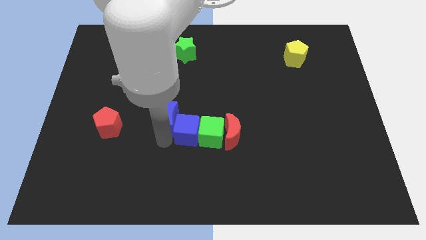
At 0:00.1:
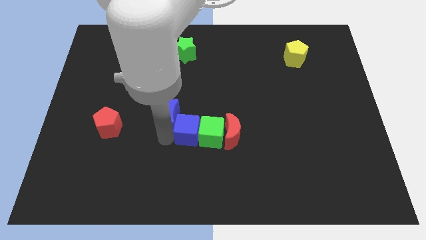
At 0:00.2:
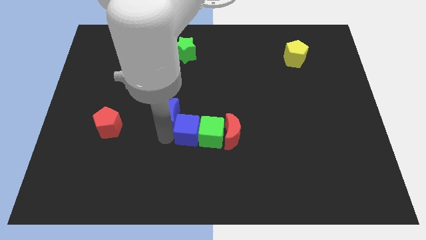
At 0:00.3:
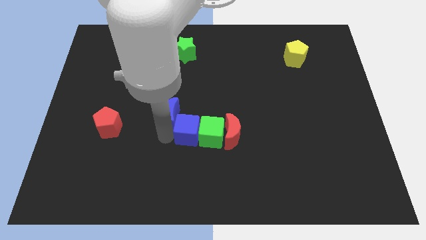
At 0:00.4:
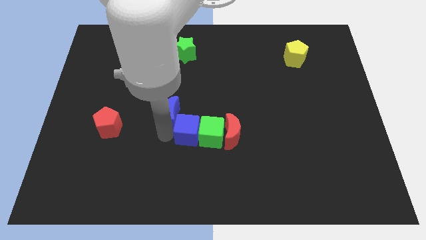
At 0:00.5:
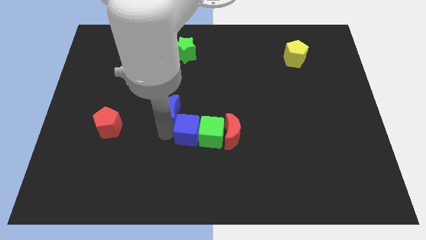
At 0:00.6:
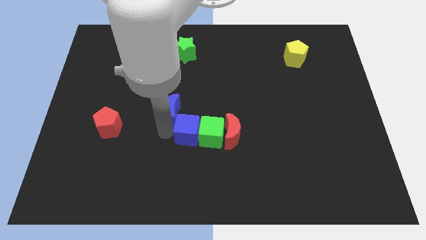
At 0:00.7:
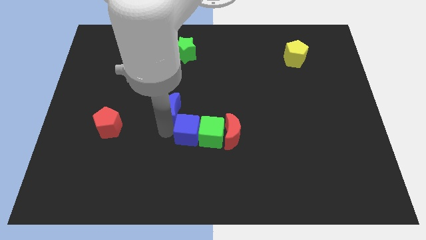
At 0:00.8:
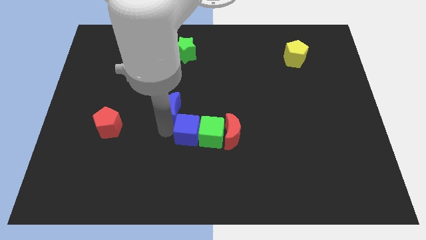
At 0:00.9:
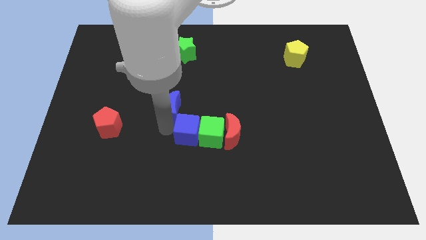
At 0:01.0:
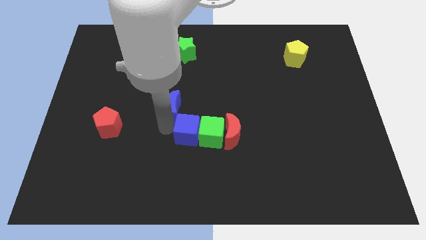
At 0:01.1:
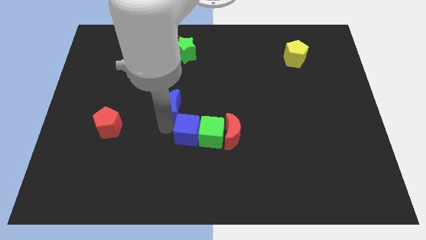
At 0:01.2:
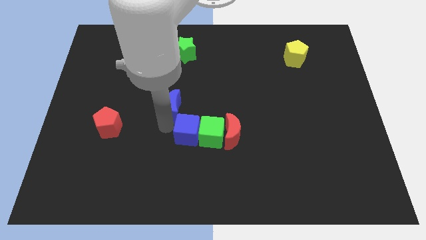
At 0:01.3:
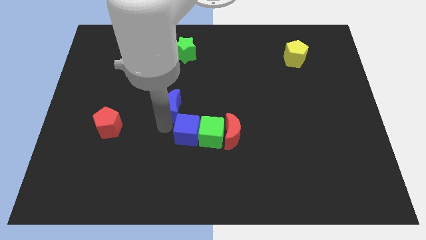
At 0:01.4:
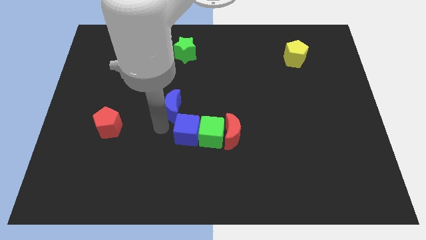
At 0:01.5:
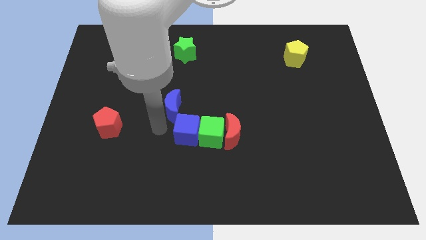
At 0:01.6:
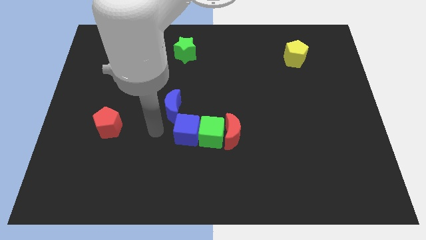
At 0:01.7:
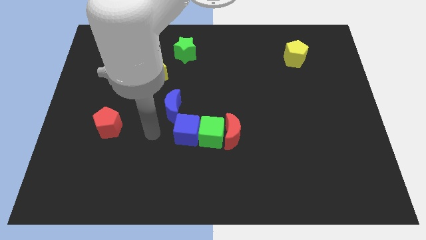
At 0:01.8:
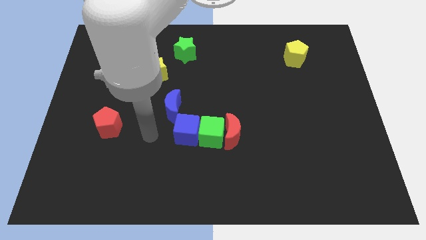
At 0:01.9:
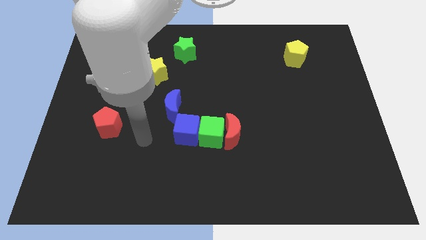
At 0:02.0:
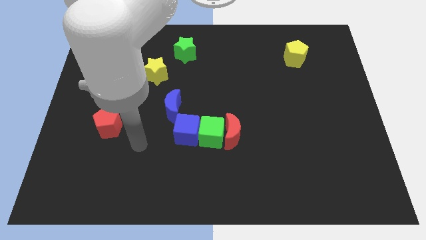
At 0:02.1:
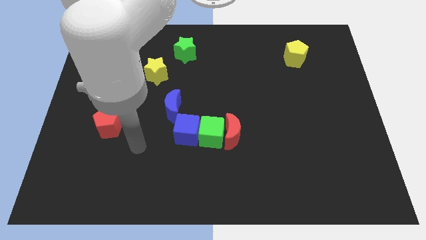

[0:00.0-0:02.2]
separate the blue moon from the blue cube

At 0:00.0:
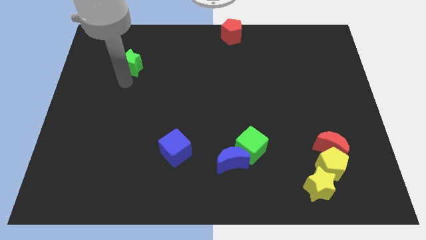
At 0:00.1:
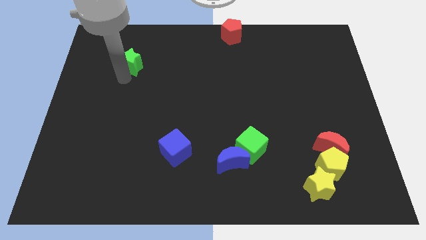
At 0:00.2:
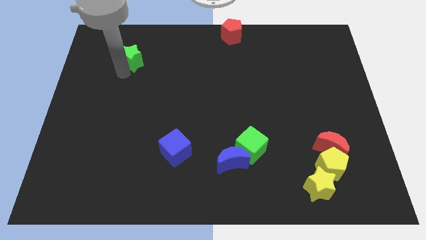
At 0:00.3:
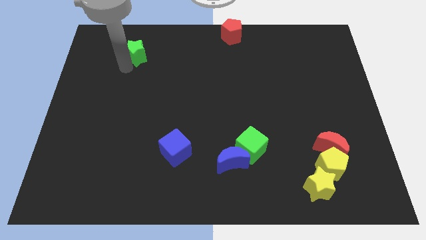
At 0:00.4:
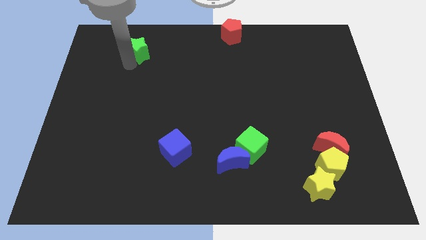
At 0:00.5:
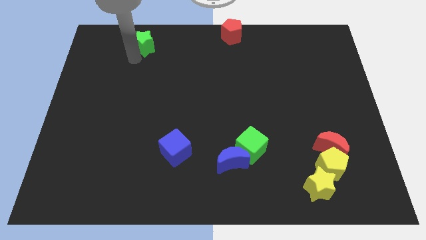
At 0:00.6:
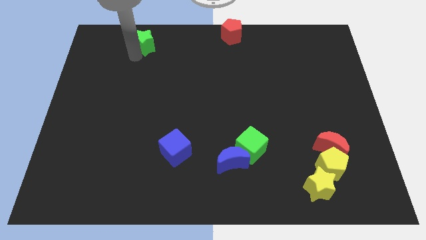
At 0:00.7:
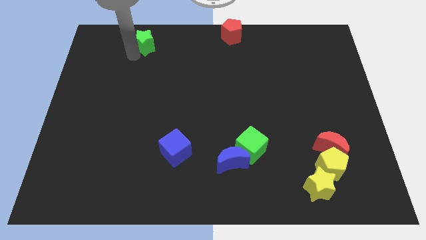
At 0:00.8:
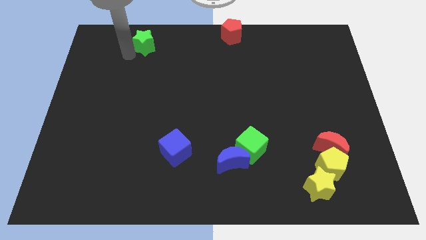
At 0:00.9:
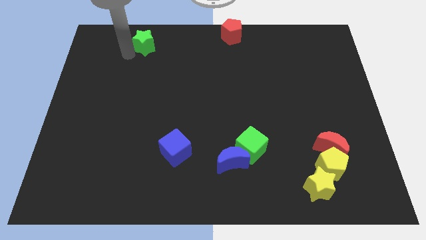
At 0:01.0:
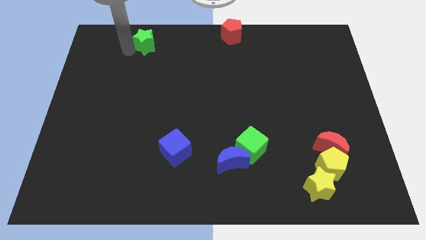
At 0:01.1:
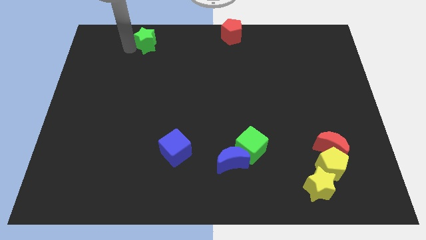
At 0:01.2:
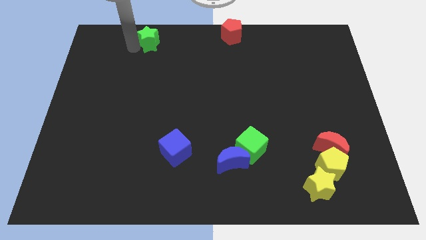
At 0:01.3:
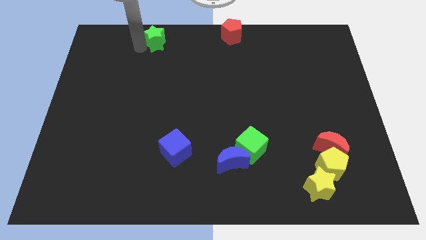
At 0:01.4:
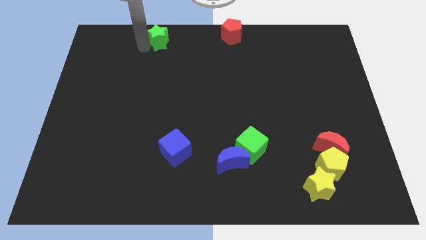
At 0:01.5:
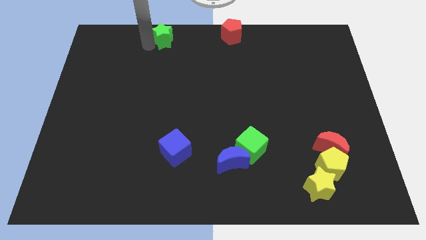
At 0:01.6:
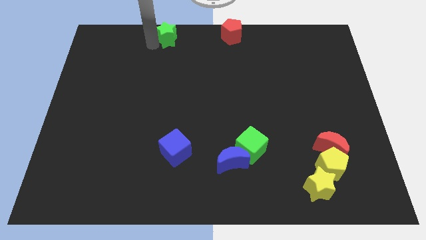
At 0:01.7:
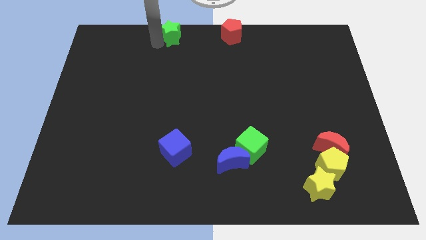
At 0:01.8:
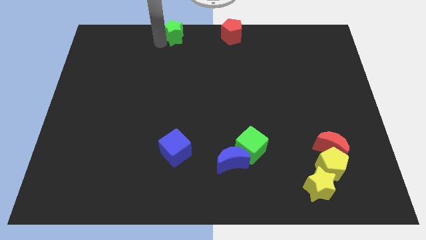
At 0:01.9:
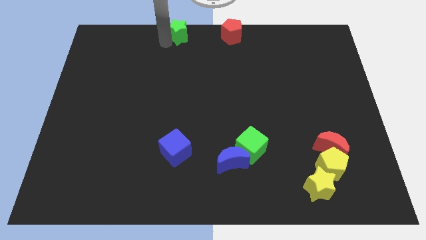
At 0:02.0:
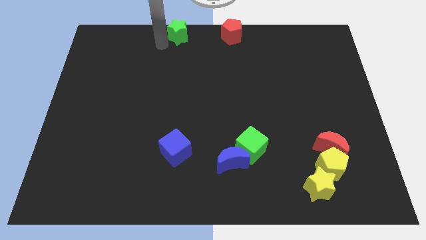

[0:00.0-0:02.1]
move the green star left to the red pentagon

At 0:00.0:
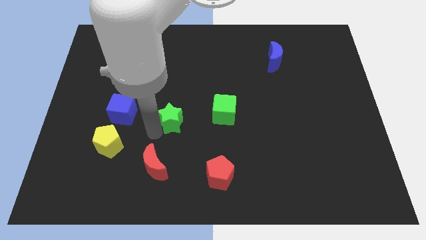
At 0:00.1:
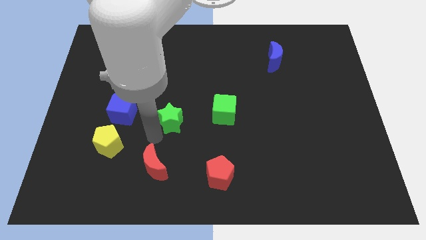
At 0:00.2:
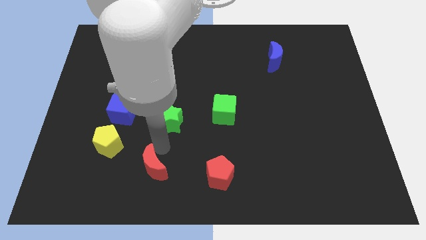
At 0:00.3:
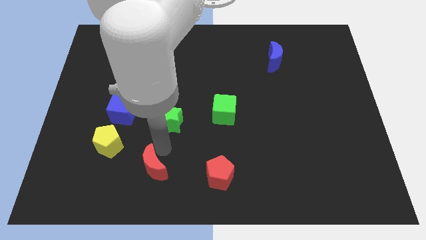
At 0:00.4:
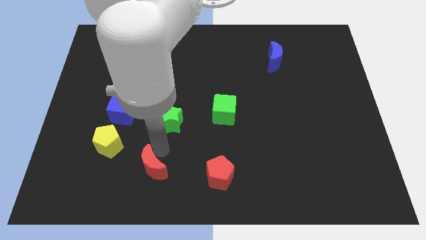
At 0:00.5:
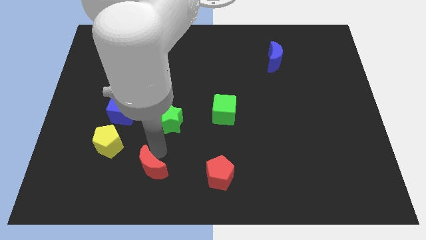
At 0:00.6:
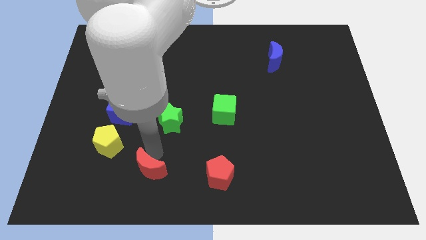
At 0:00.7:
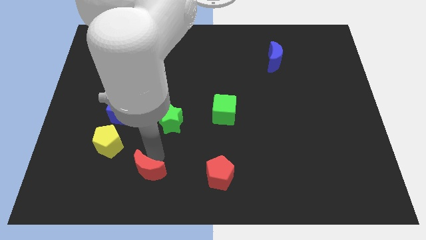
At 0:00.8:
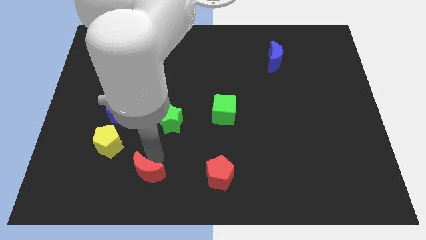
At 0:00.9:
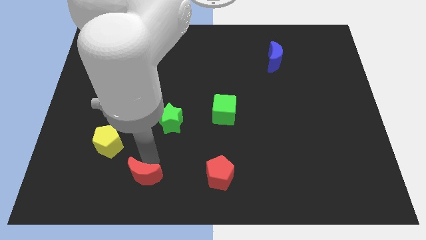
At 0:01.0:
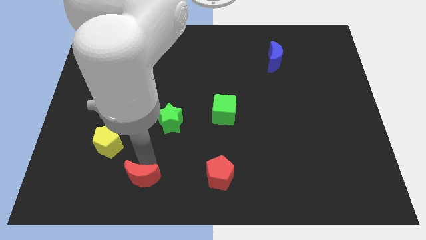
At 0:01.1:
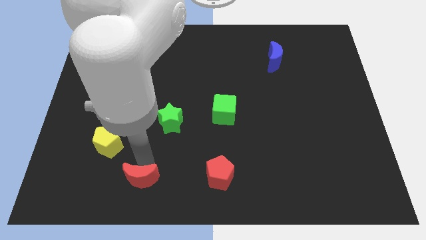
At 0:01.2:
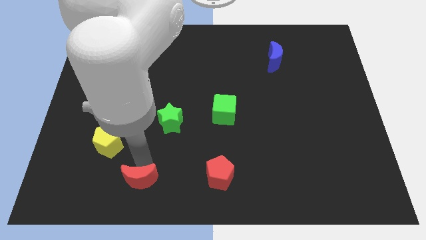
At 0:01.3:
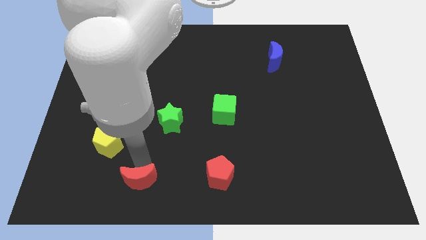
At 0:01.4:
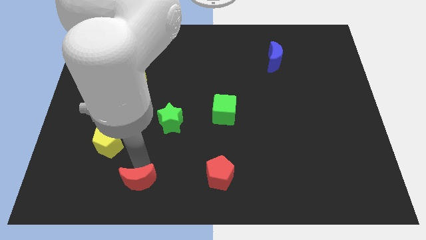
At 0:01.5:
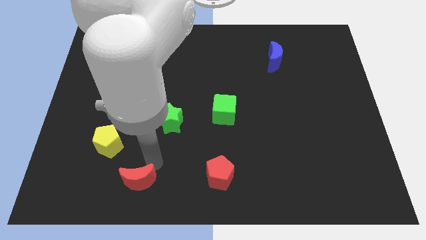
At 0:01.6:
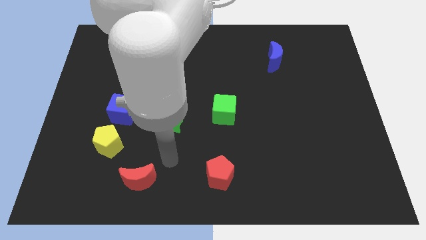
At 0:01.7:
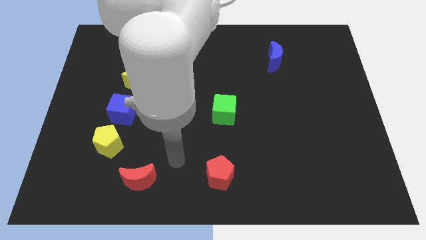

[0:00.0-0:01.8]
push the red moon downwards slightly

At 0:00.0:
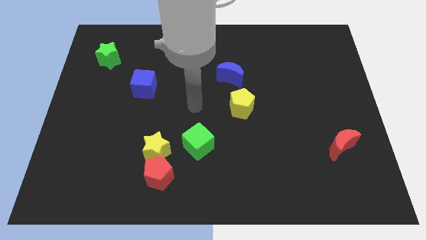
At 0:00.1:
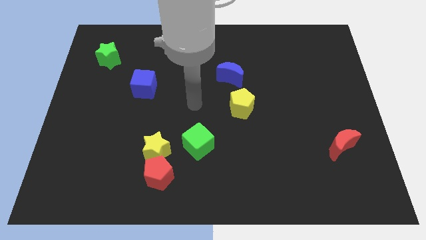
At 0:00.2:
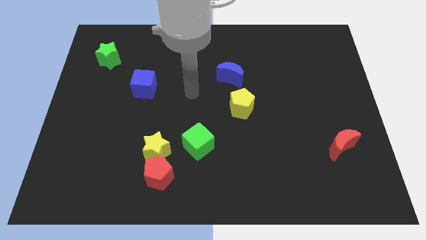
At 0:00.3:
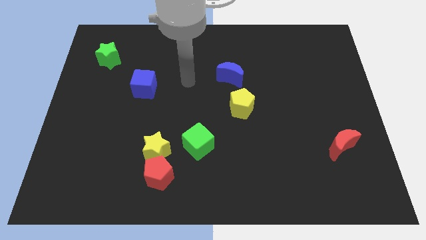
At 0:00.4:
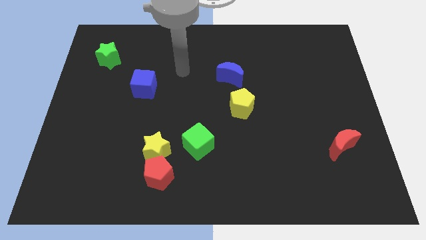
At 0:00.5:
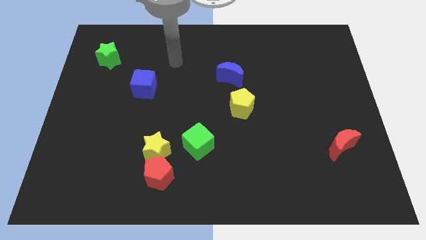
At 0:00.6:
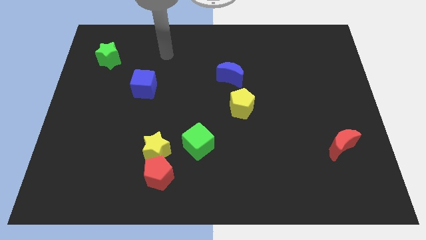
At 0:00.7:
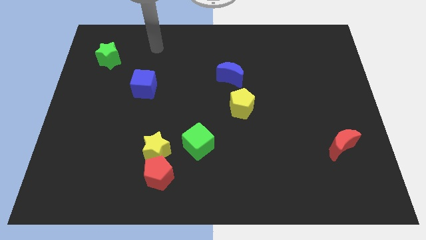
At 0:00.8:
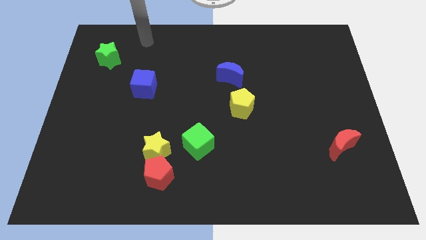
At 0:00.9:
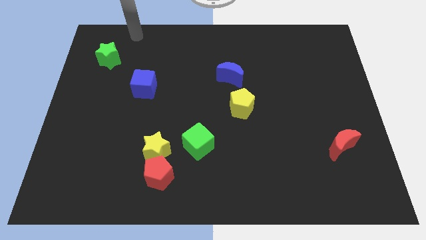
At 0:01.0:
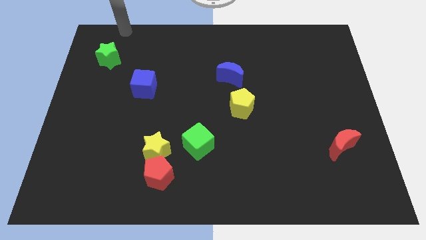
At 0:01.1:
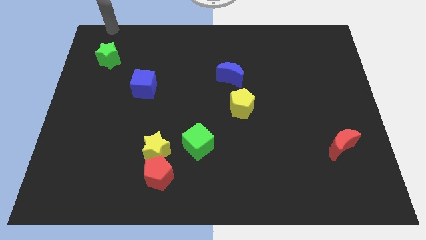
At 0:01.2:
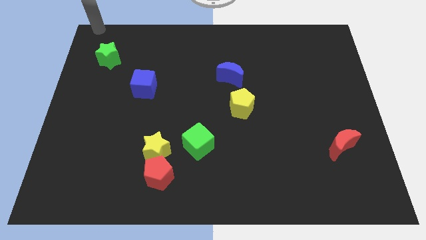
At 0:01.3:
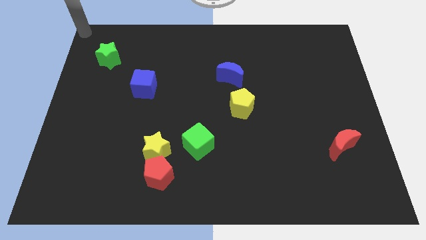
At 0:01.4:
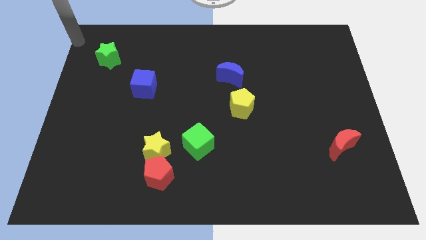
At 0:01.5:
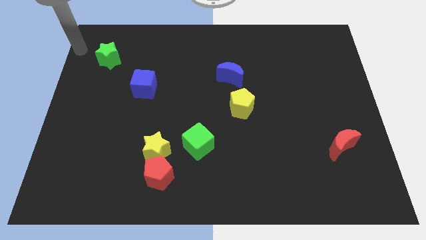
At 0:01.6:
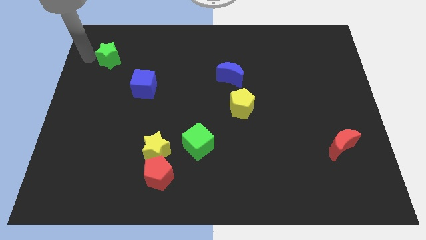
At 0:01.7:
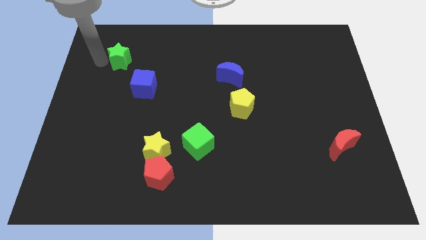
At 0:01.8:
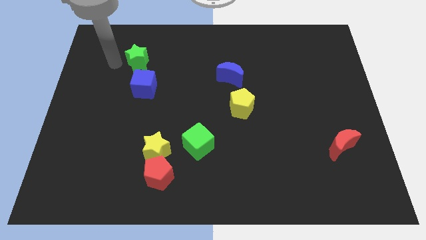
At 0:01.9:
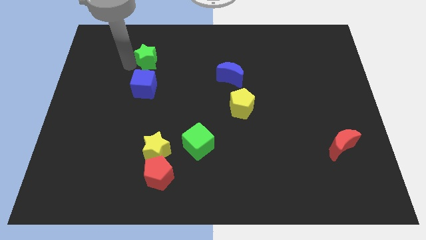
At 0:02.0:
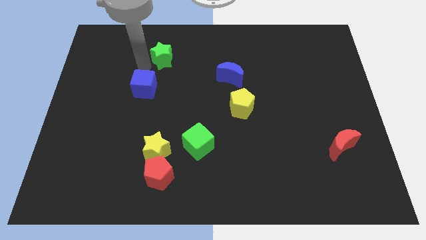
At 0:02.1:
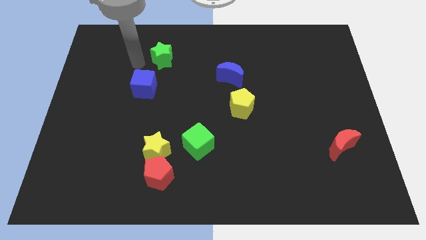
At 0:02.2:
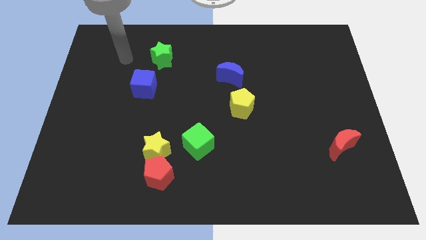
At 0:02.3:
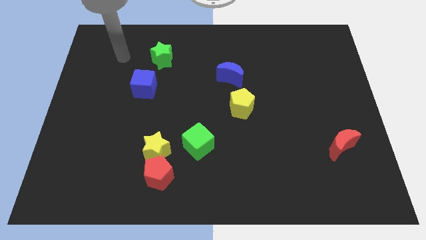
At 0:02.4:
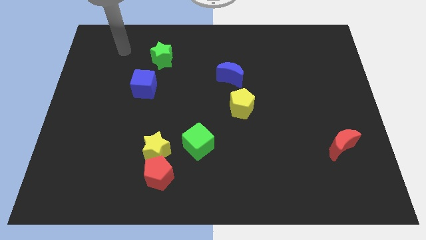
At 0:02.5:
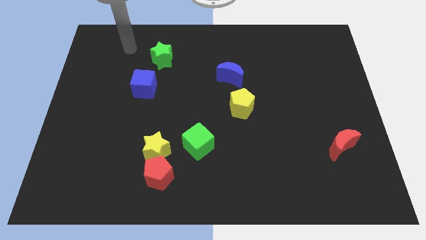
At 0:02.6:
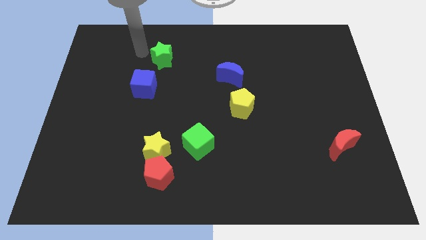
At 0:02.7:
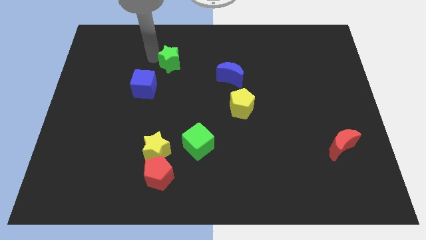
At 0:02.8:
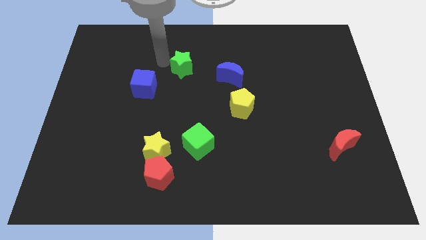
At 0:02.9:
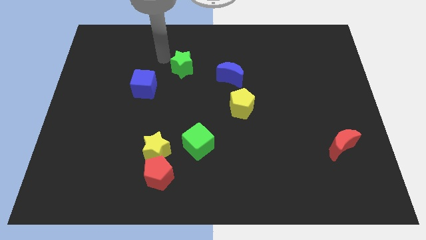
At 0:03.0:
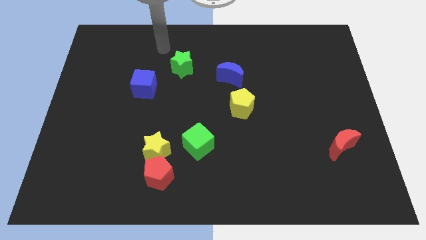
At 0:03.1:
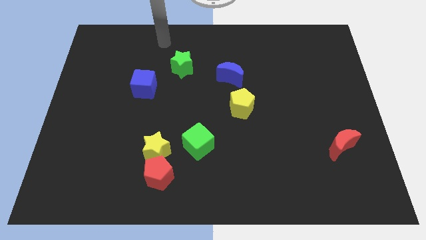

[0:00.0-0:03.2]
place the green star at the top of the green cube
